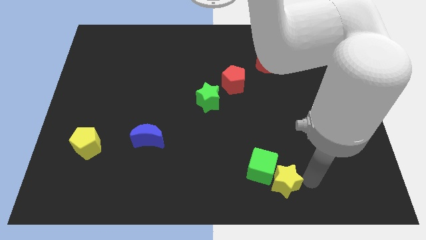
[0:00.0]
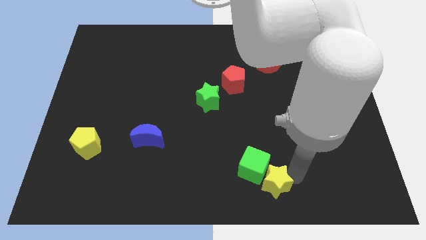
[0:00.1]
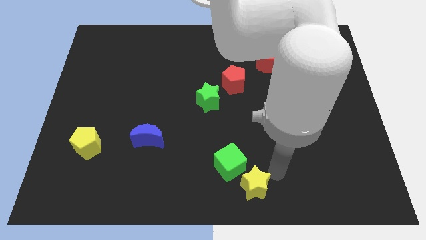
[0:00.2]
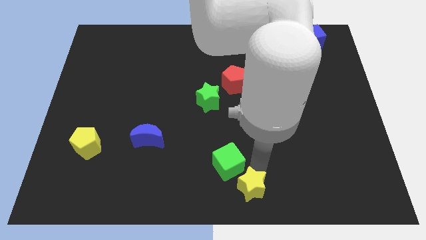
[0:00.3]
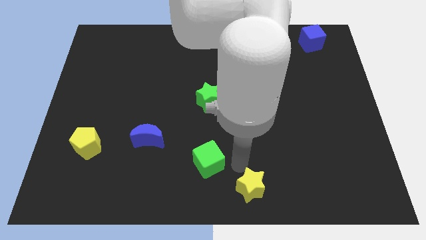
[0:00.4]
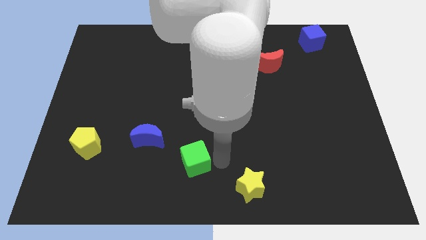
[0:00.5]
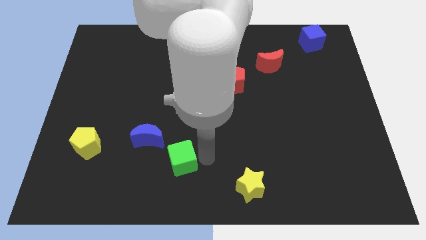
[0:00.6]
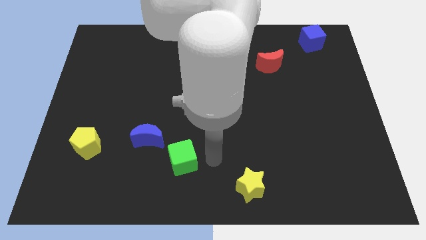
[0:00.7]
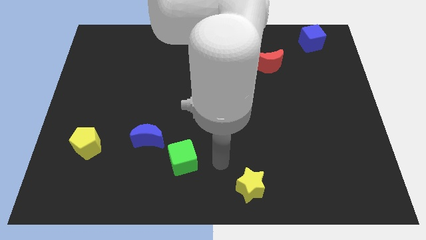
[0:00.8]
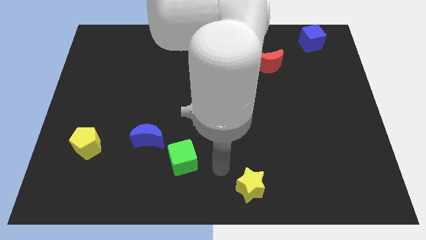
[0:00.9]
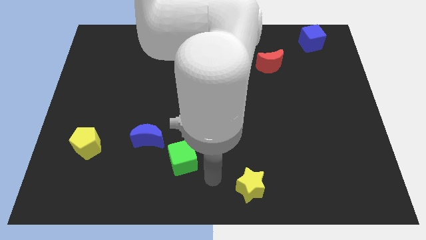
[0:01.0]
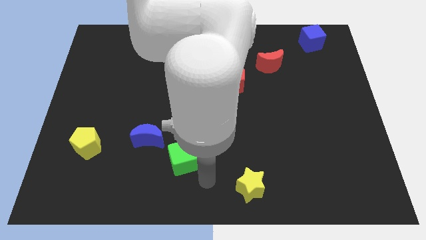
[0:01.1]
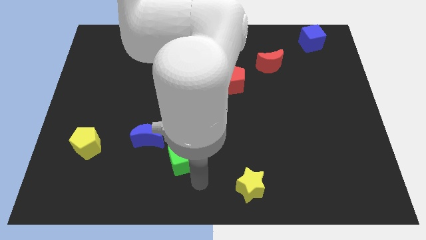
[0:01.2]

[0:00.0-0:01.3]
separate the green cube from the yellow star

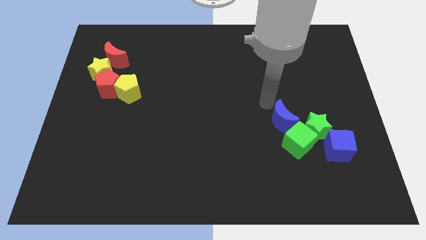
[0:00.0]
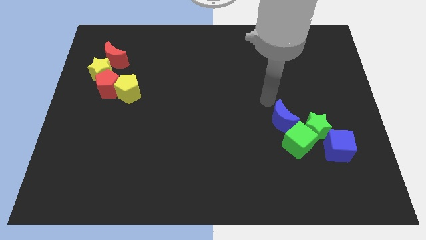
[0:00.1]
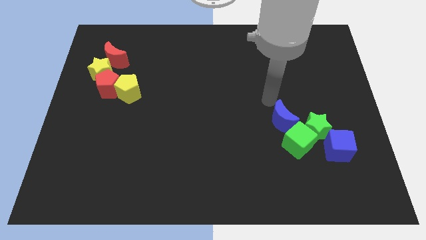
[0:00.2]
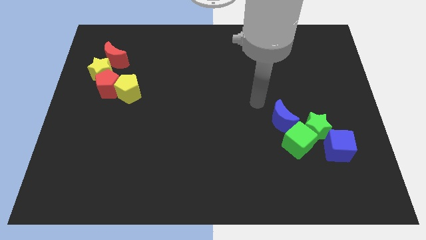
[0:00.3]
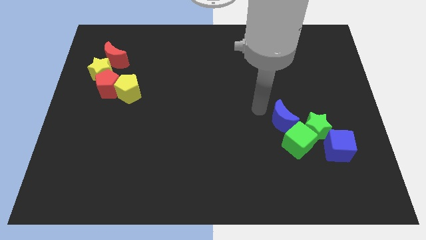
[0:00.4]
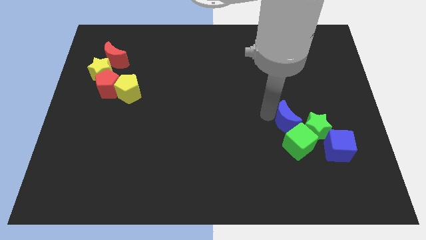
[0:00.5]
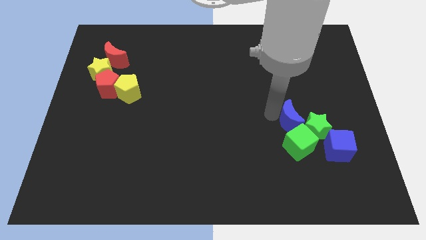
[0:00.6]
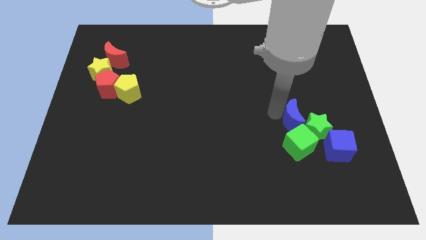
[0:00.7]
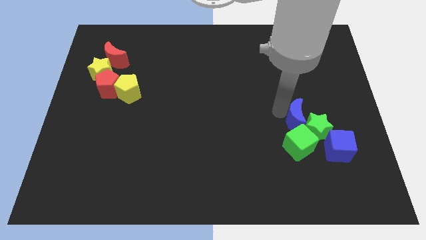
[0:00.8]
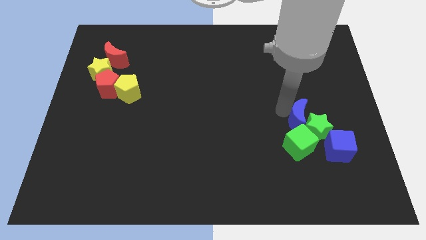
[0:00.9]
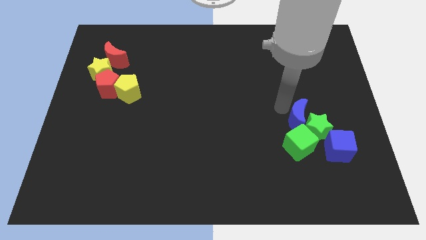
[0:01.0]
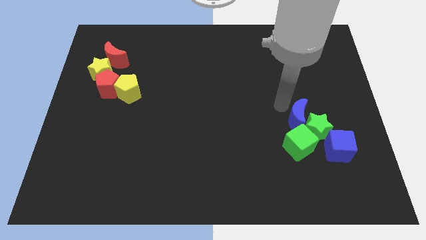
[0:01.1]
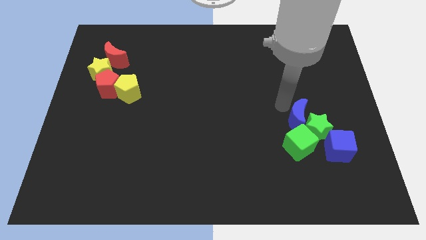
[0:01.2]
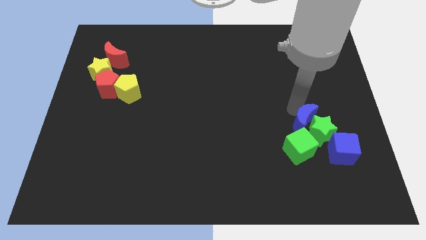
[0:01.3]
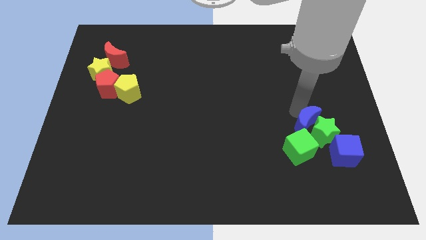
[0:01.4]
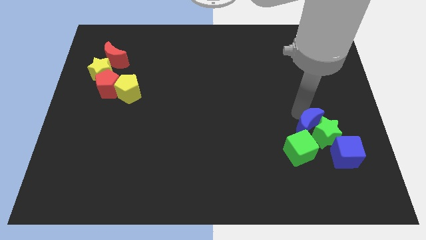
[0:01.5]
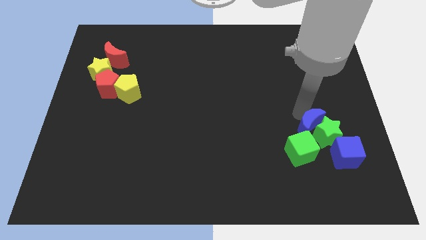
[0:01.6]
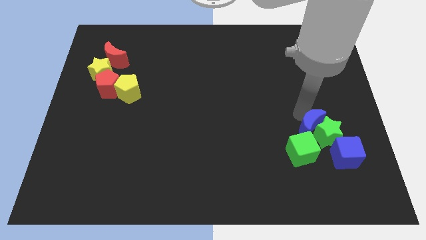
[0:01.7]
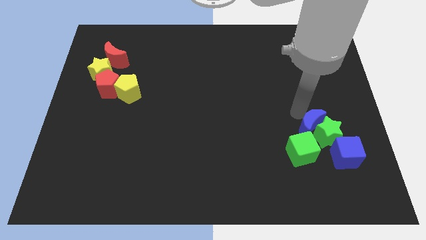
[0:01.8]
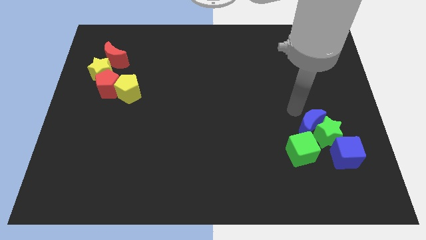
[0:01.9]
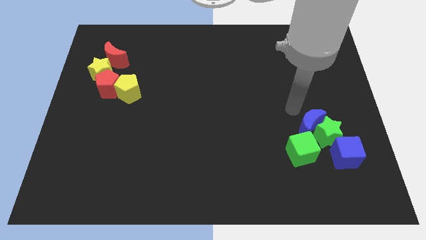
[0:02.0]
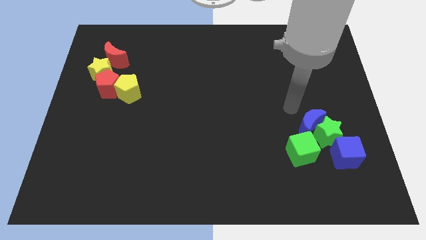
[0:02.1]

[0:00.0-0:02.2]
push group of blocks to the right side

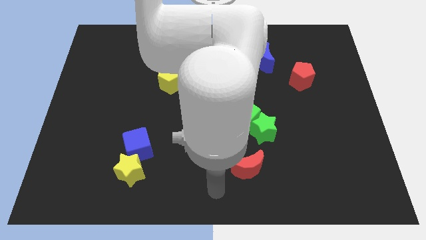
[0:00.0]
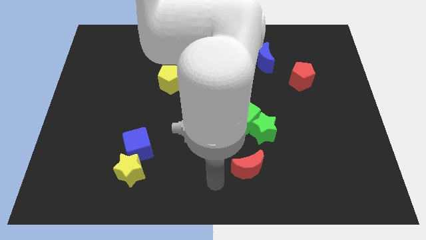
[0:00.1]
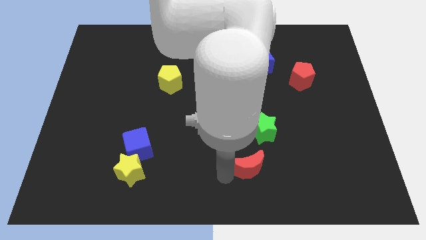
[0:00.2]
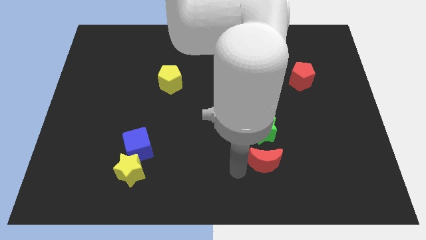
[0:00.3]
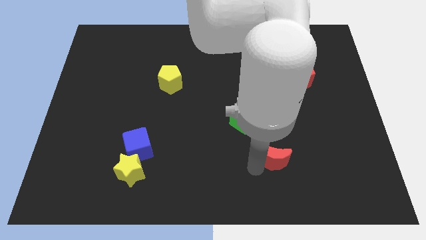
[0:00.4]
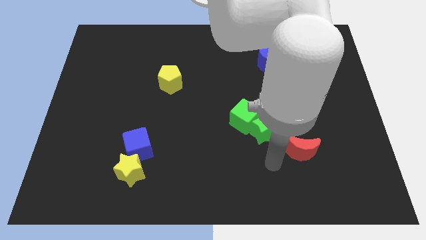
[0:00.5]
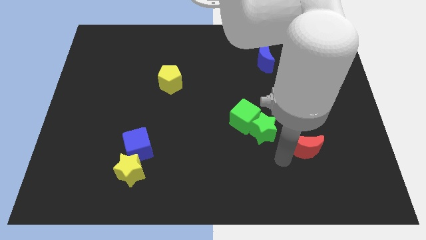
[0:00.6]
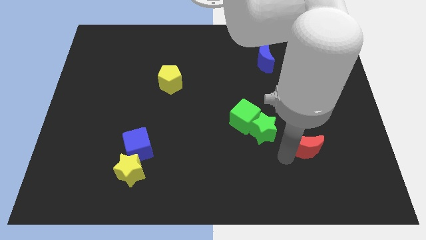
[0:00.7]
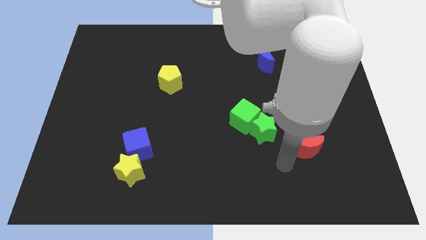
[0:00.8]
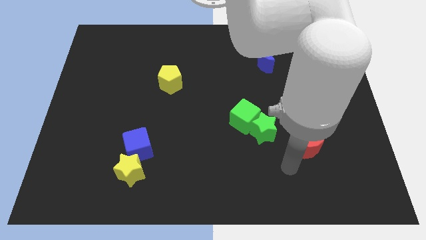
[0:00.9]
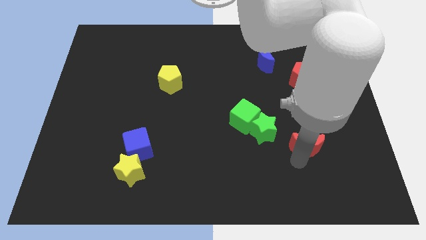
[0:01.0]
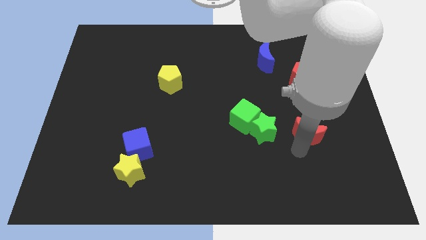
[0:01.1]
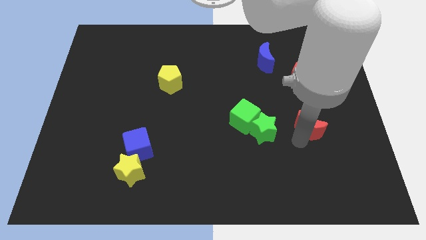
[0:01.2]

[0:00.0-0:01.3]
move the red crescent to the right of the green star

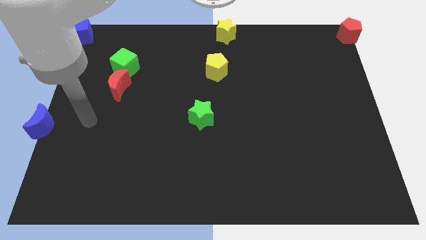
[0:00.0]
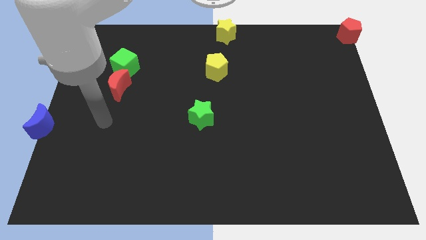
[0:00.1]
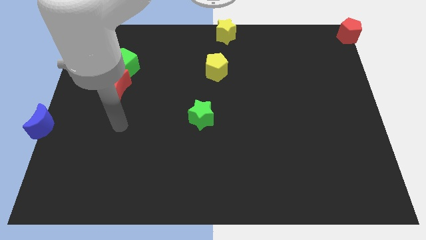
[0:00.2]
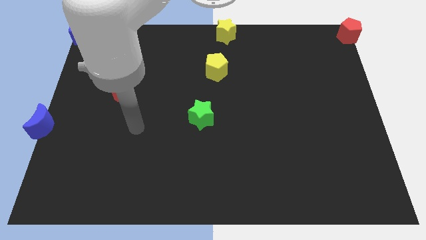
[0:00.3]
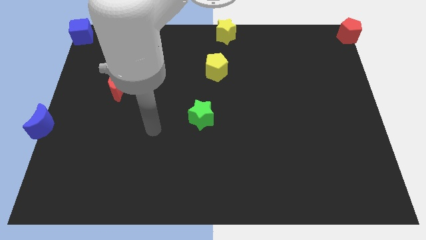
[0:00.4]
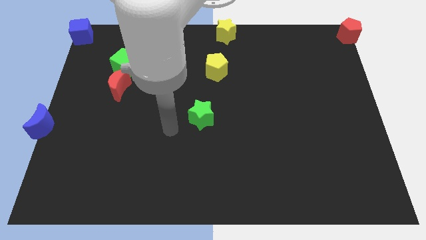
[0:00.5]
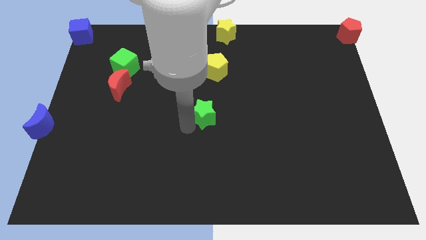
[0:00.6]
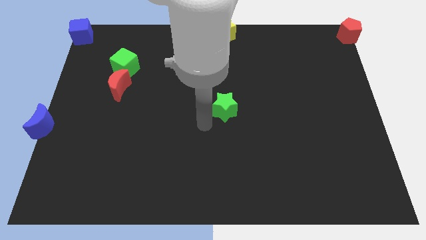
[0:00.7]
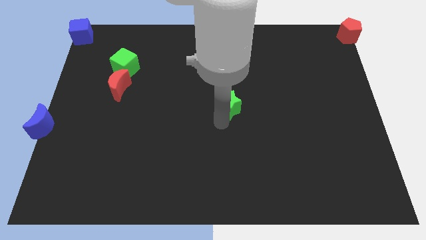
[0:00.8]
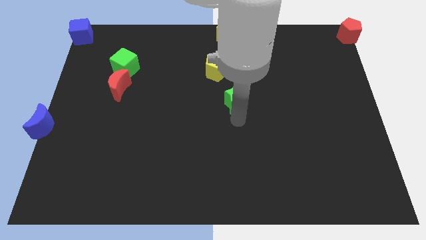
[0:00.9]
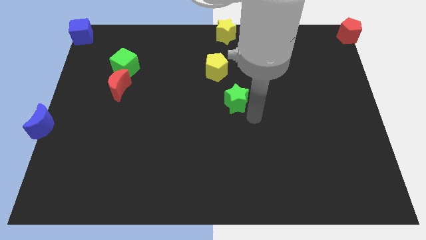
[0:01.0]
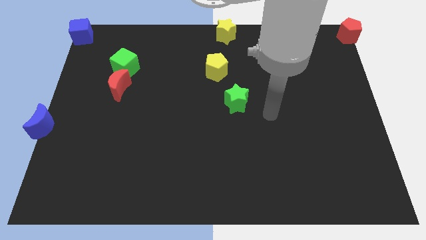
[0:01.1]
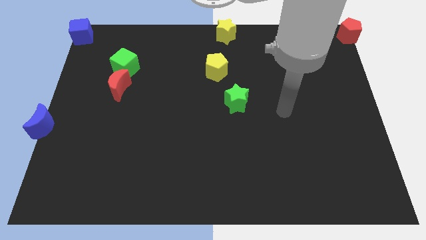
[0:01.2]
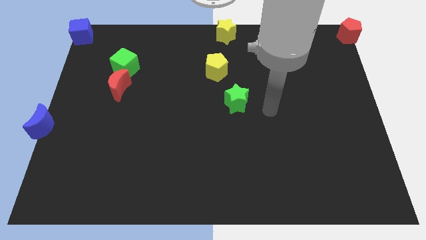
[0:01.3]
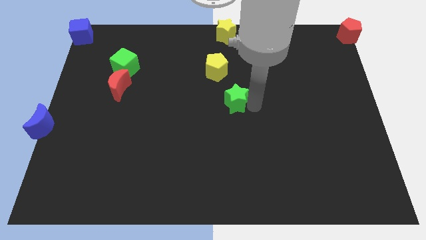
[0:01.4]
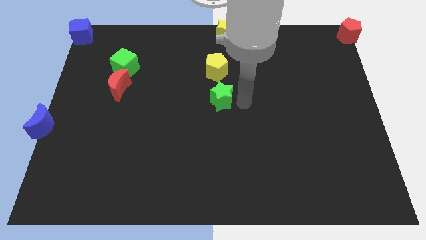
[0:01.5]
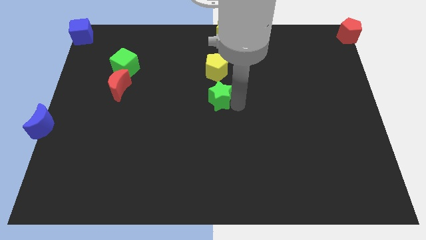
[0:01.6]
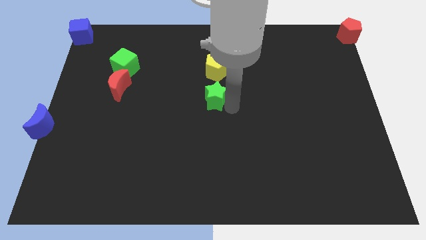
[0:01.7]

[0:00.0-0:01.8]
push green star below yellow pentagon

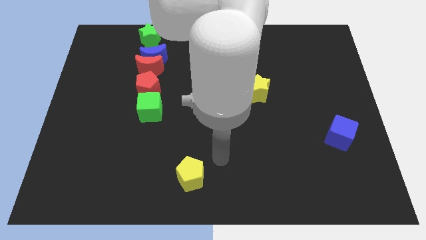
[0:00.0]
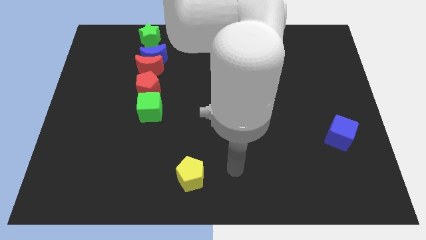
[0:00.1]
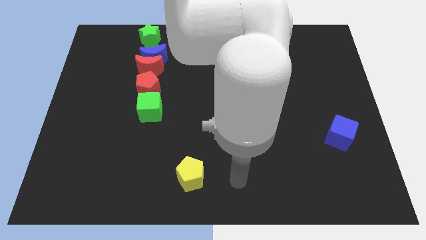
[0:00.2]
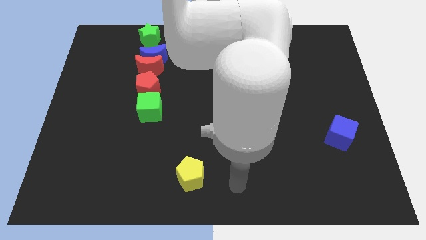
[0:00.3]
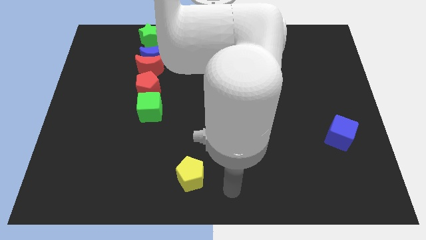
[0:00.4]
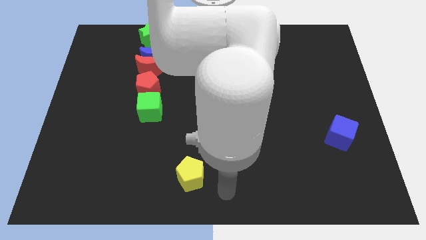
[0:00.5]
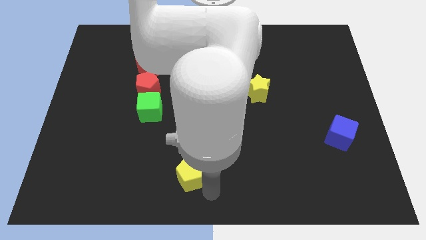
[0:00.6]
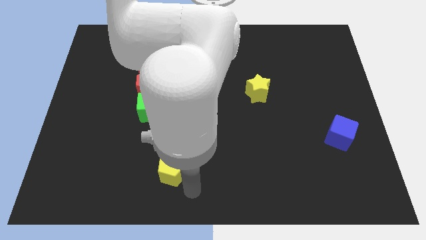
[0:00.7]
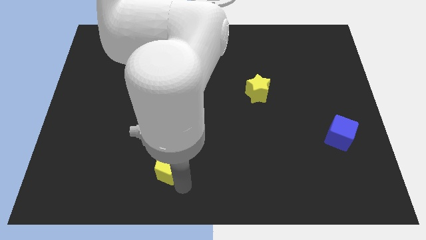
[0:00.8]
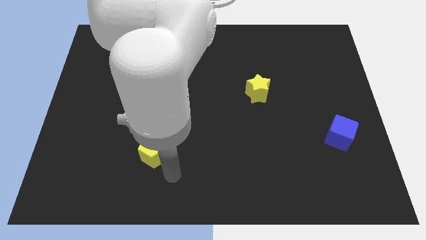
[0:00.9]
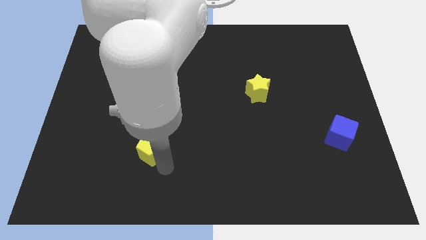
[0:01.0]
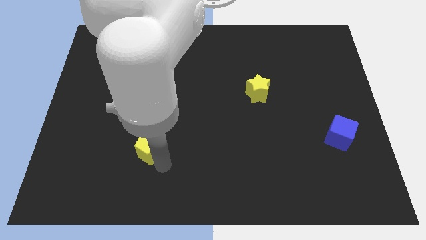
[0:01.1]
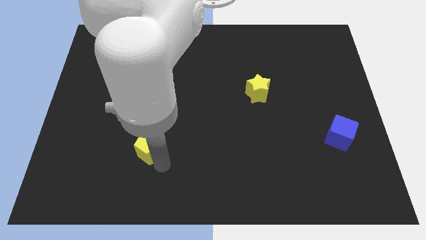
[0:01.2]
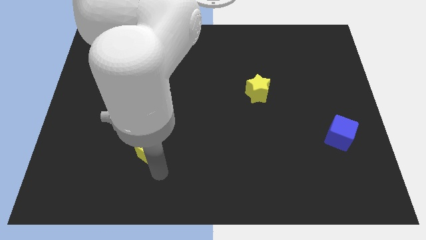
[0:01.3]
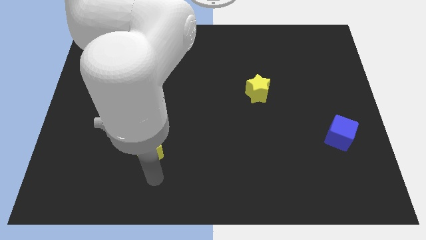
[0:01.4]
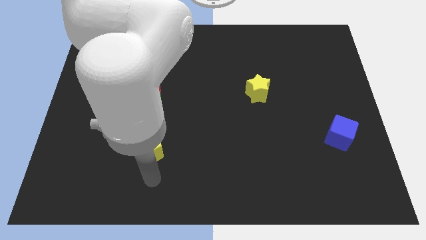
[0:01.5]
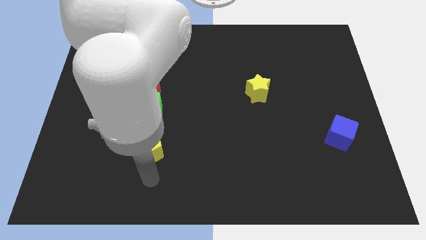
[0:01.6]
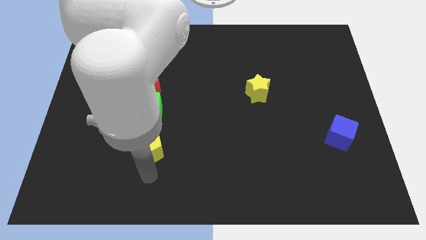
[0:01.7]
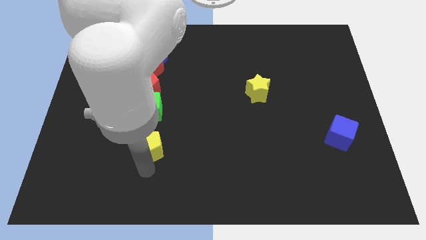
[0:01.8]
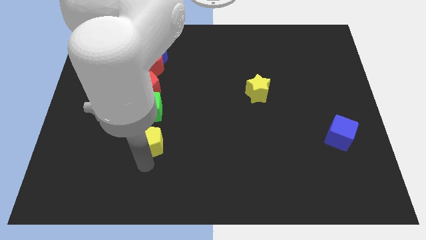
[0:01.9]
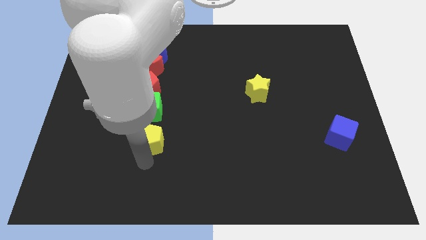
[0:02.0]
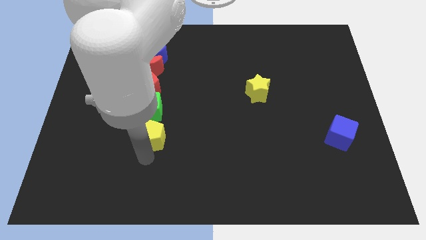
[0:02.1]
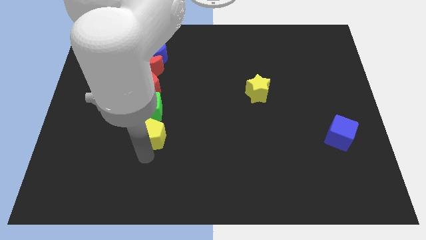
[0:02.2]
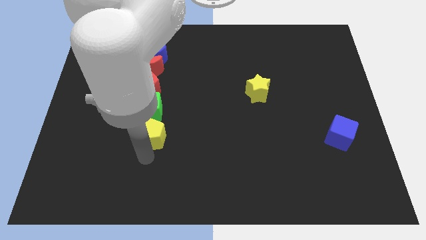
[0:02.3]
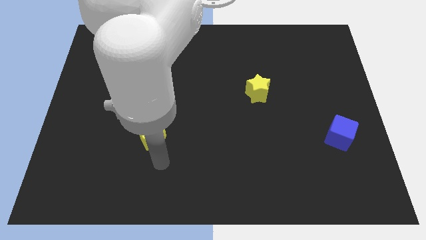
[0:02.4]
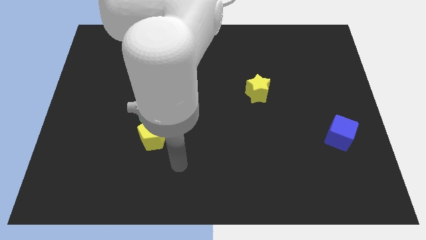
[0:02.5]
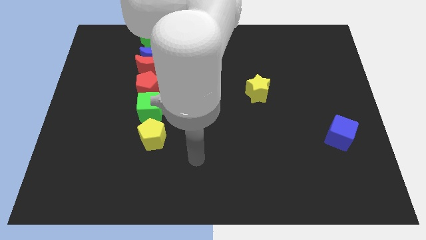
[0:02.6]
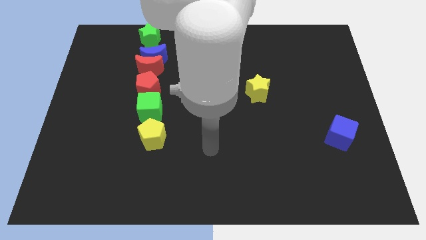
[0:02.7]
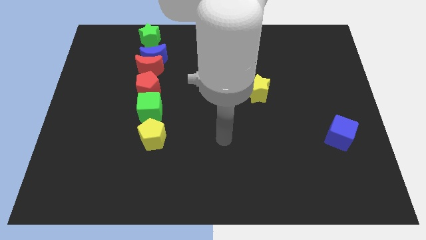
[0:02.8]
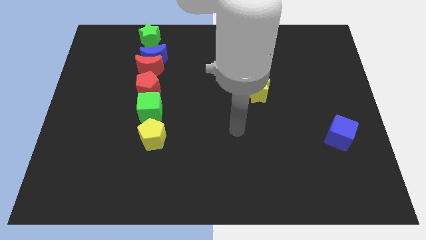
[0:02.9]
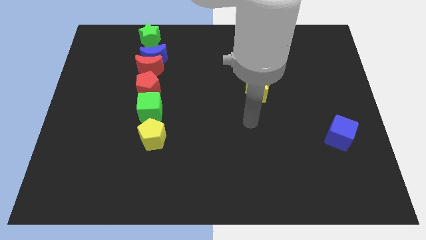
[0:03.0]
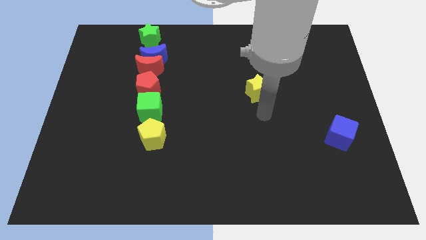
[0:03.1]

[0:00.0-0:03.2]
slide the yellow pentagon below the green cube
